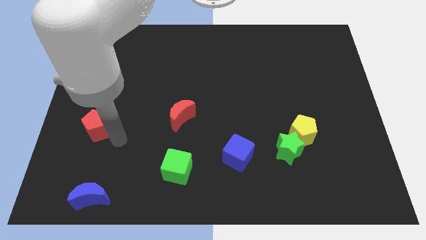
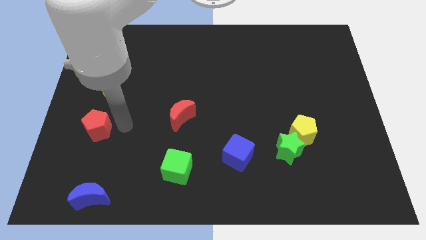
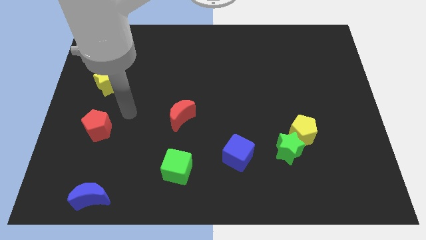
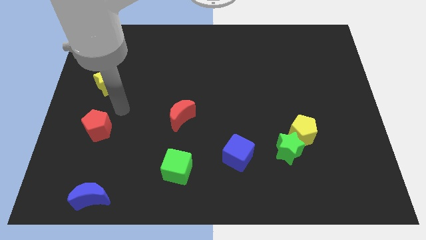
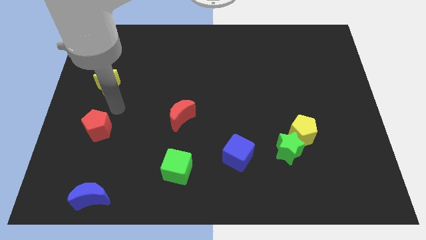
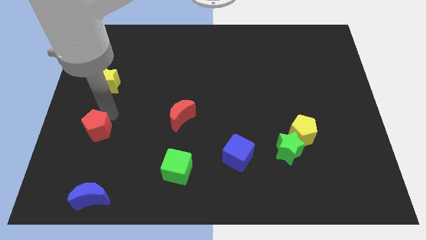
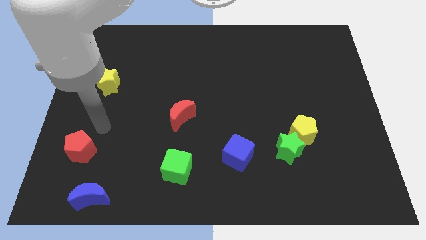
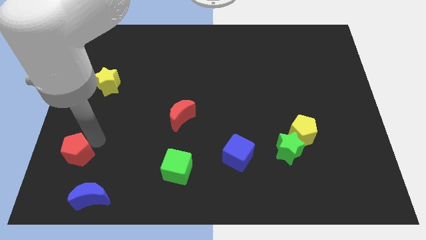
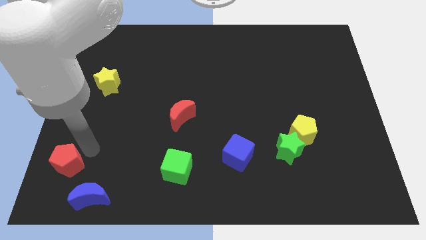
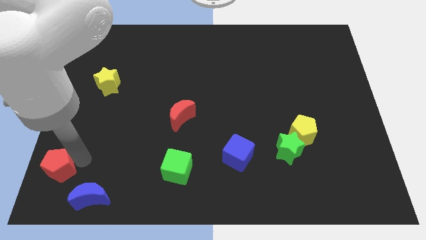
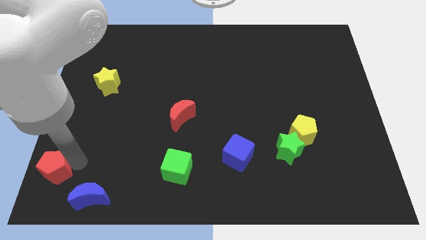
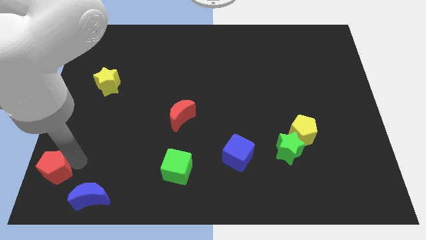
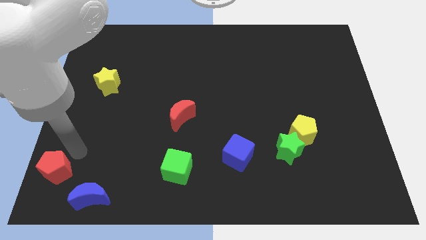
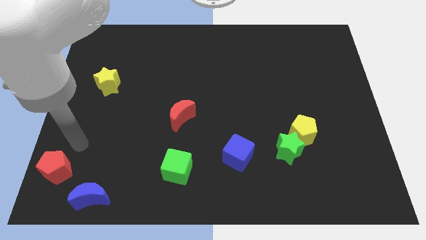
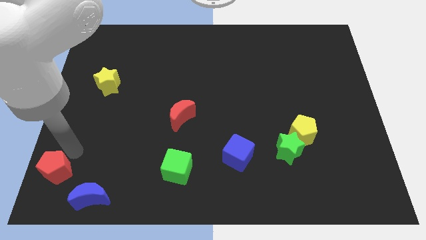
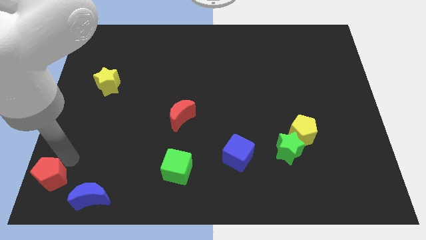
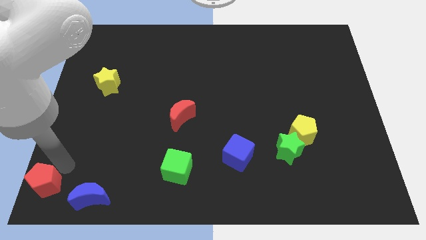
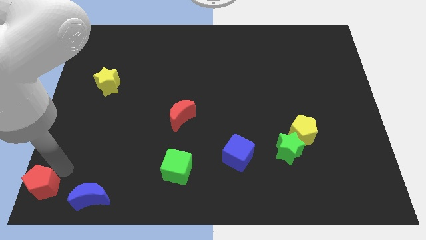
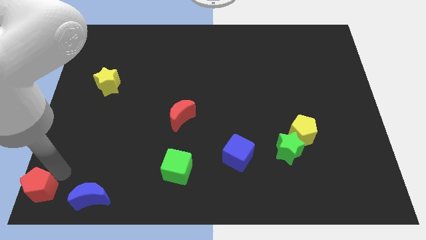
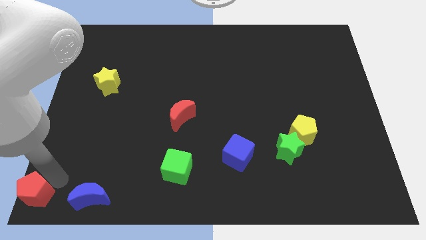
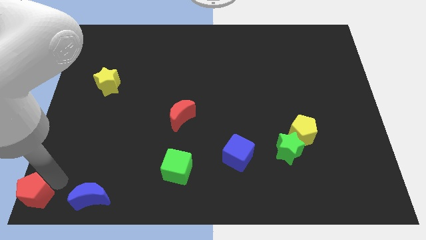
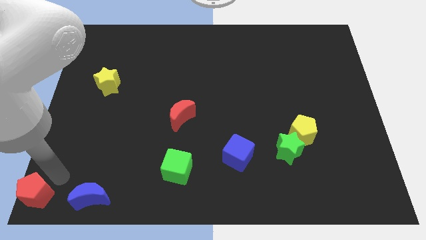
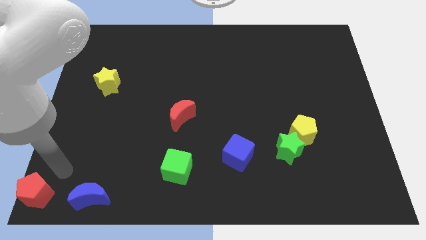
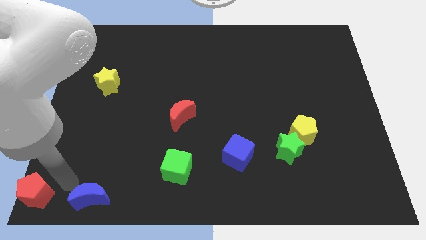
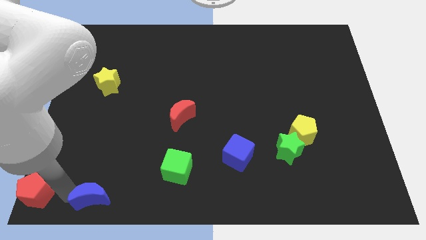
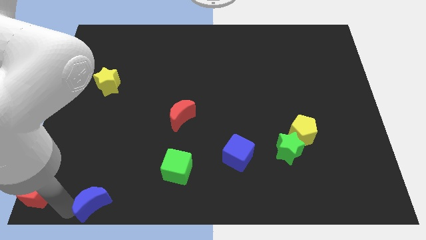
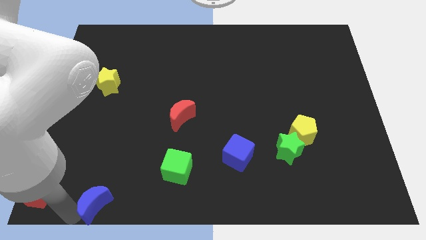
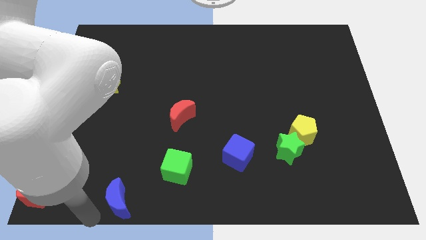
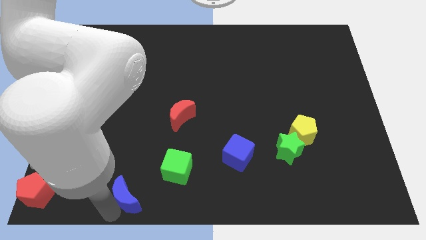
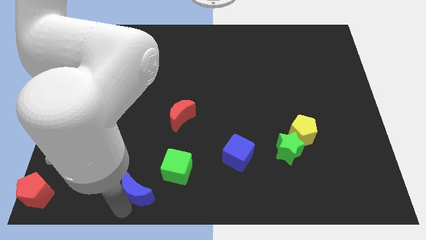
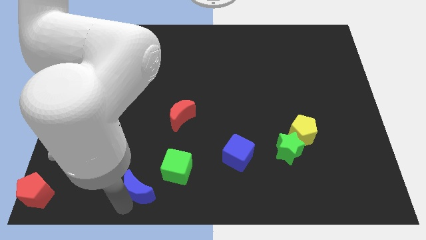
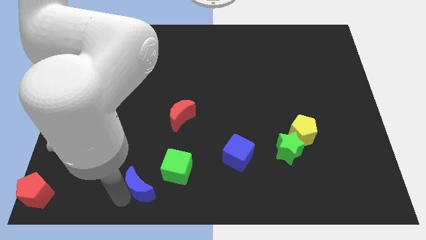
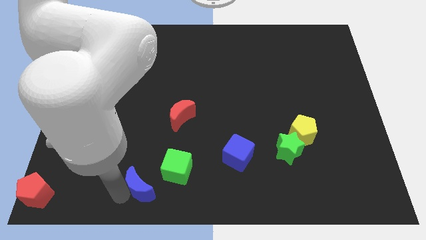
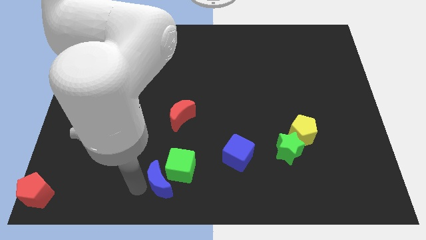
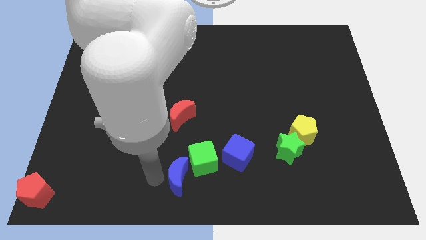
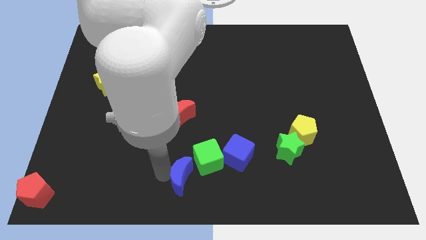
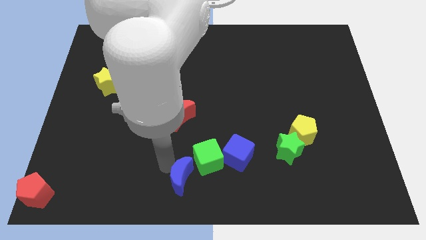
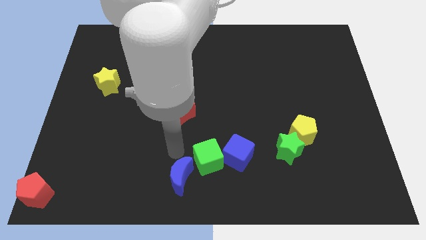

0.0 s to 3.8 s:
push the blue crescent into the green cube

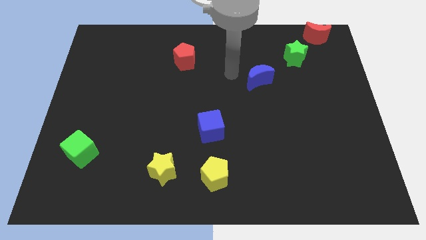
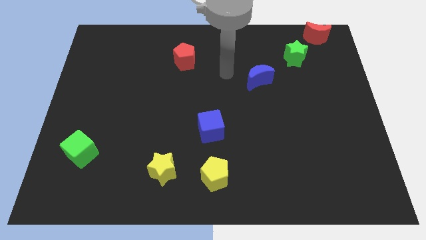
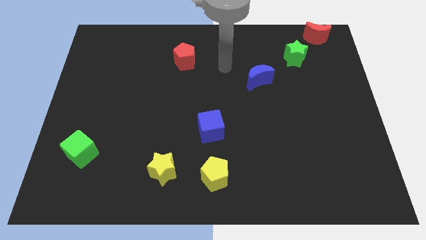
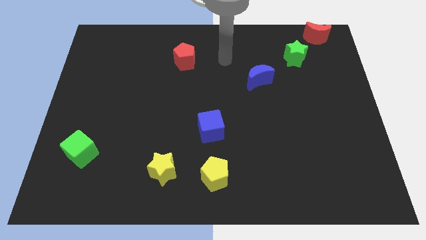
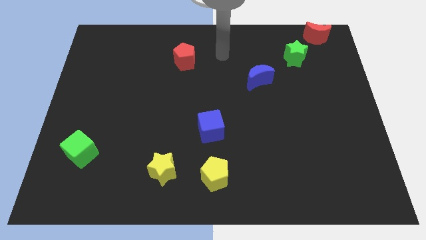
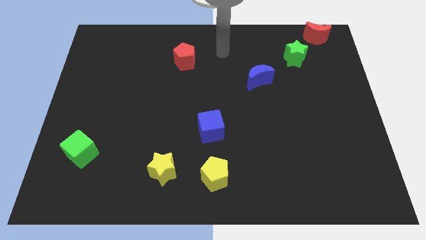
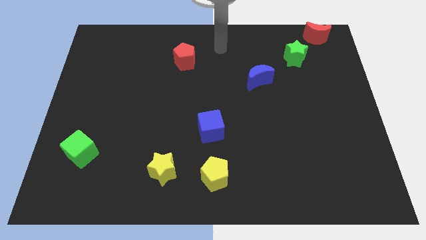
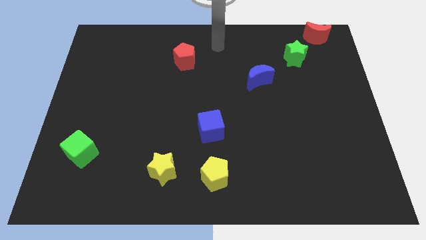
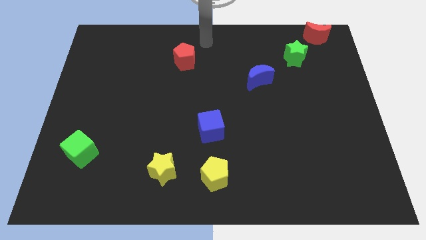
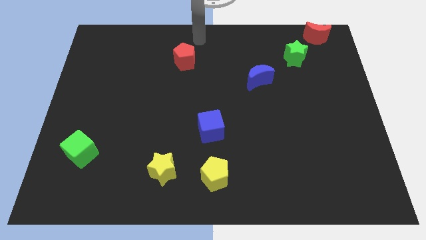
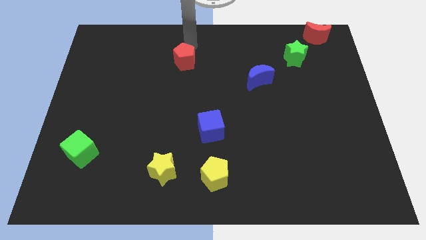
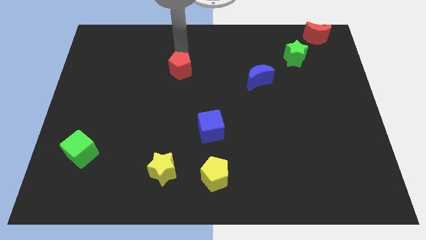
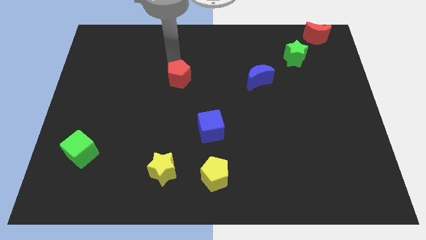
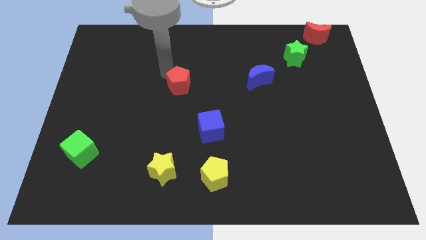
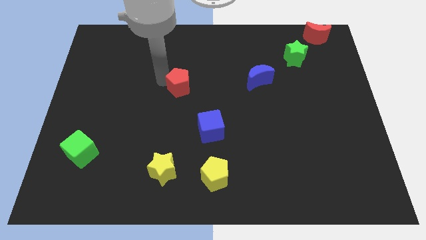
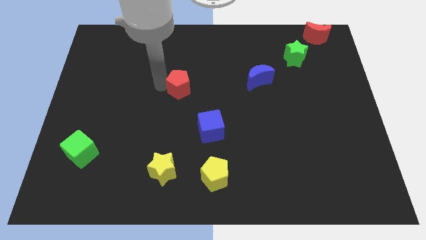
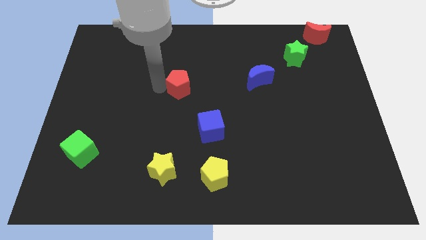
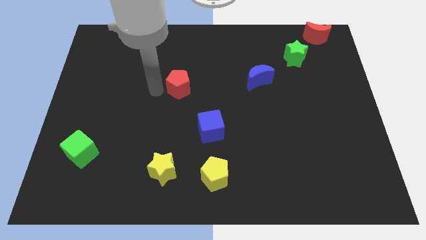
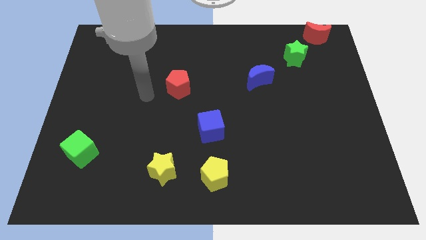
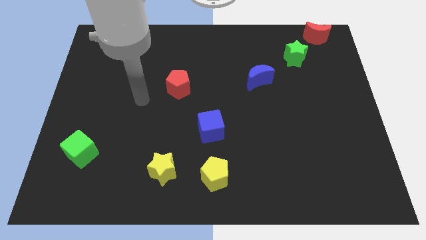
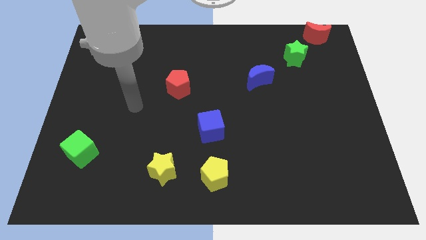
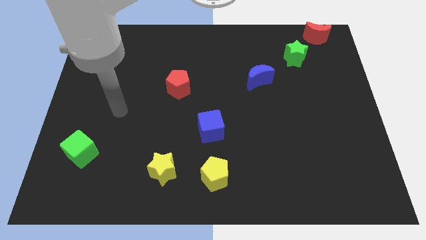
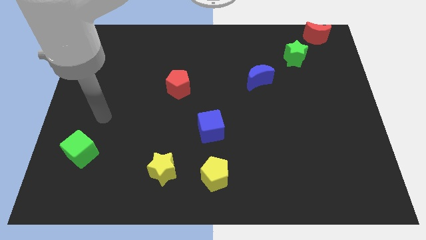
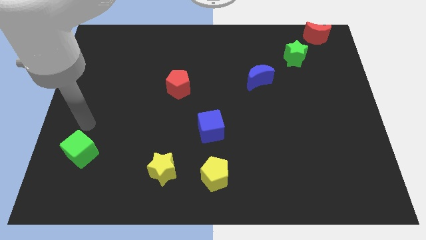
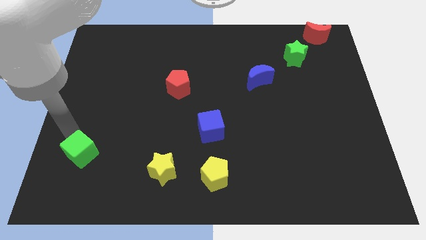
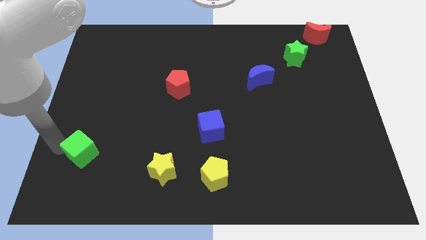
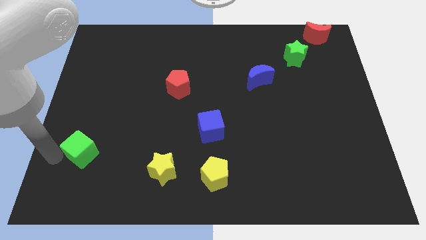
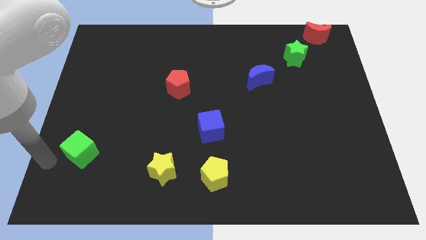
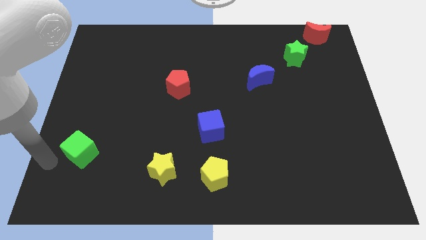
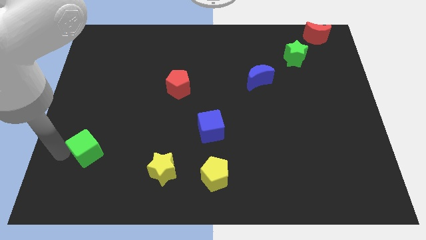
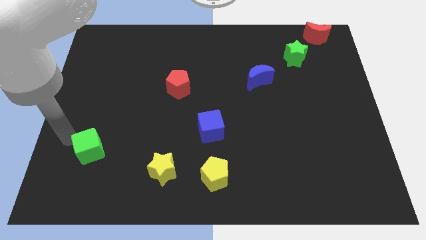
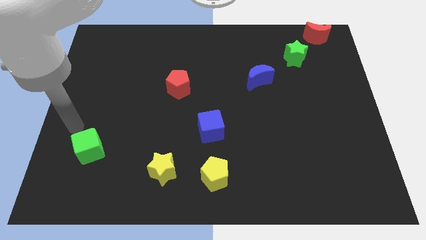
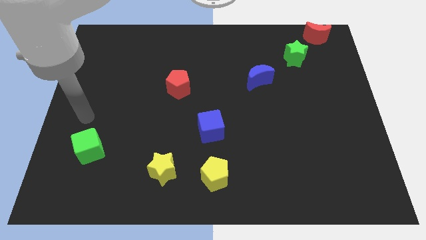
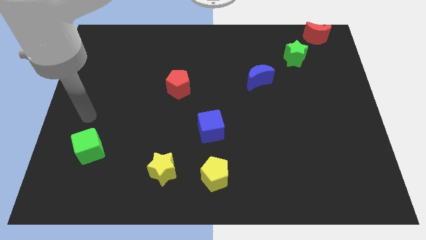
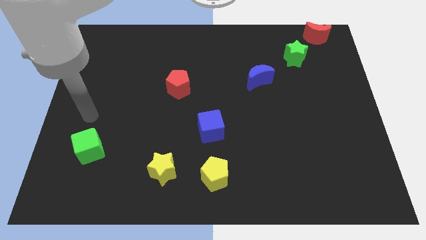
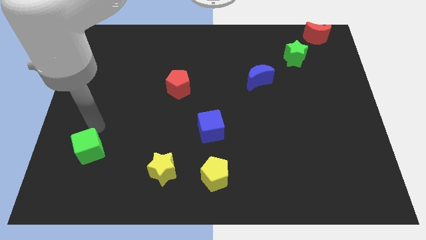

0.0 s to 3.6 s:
adjust the red pentagon and green cube diagonal to each other

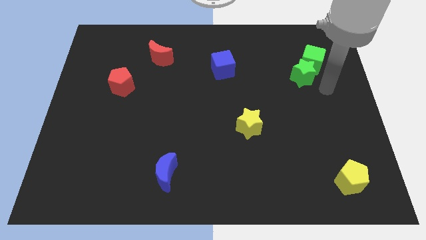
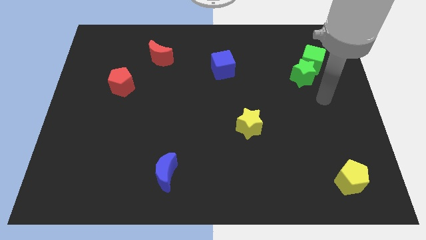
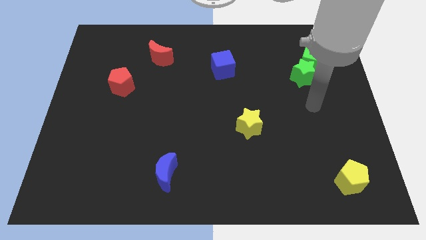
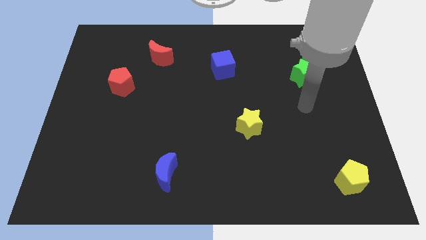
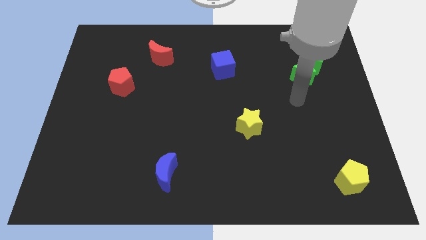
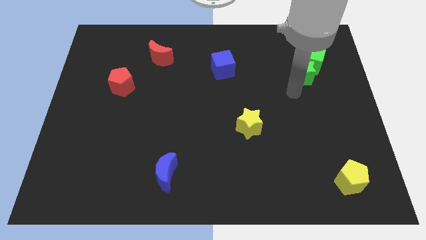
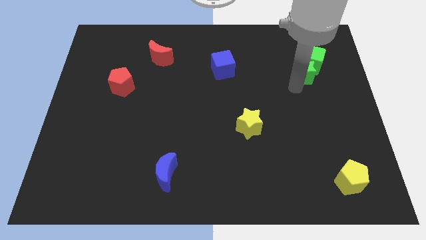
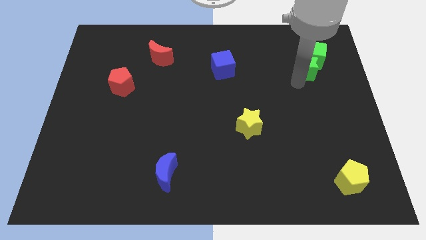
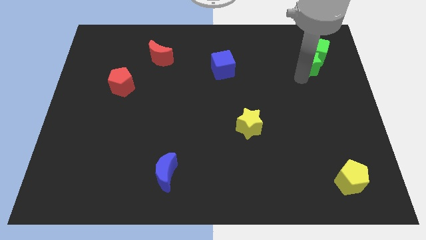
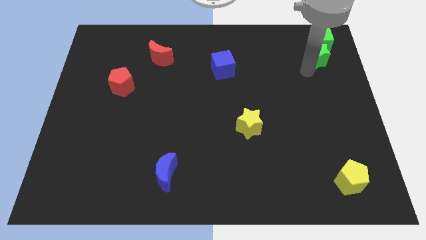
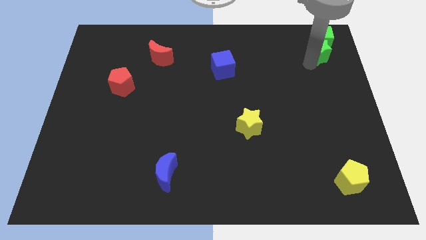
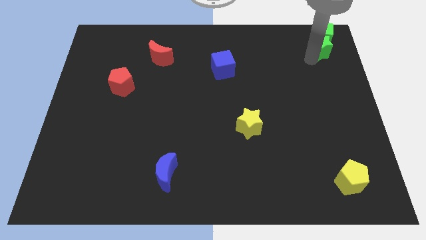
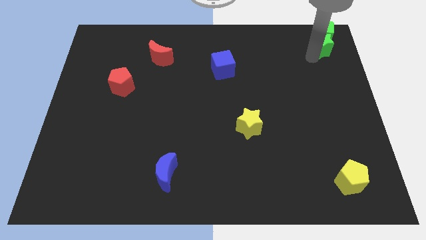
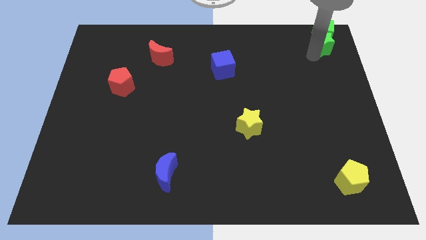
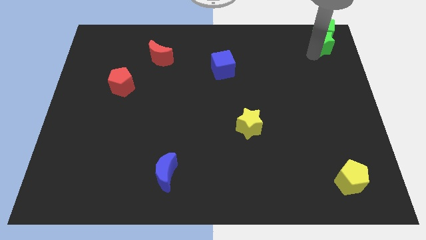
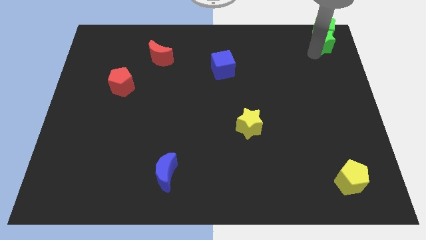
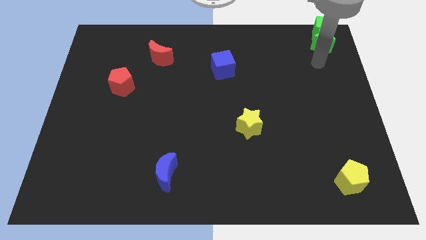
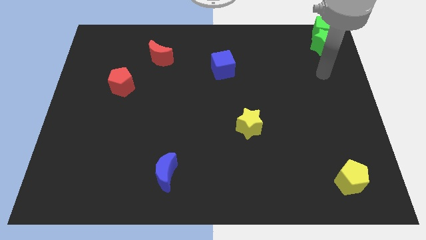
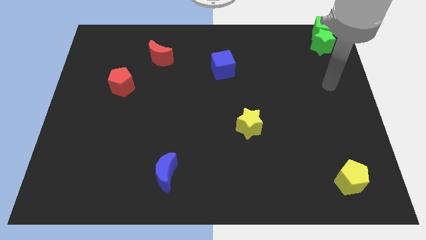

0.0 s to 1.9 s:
push the both green blocks into the top right corner
